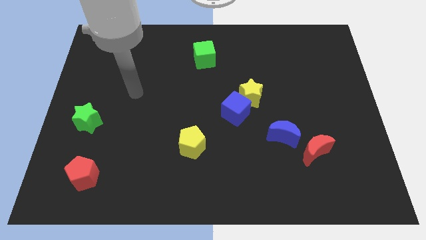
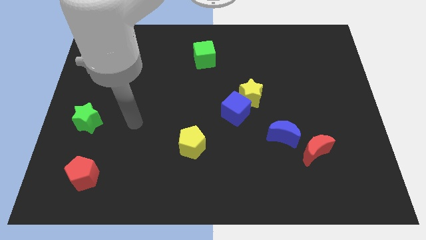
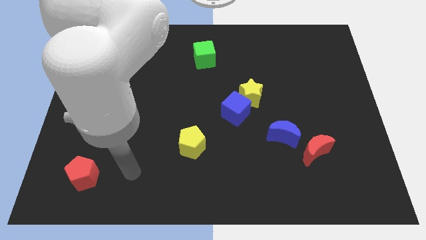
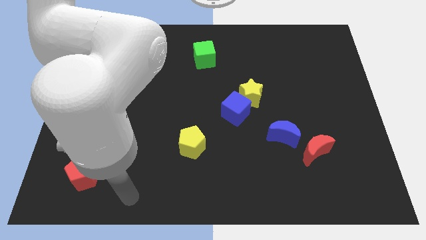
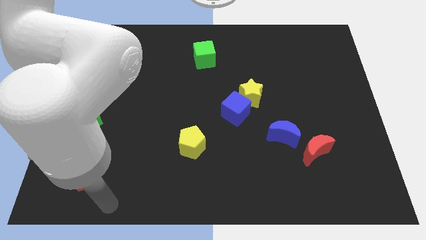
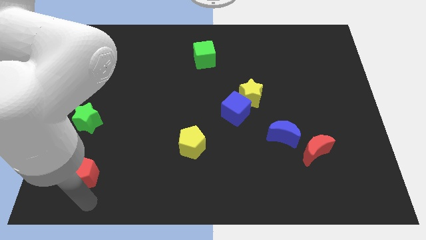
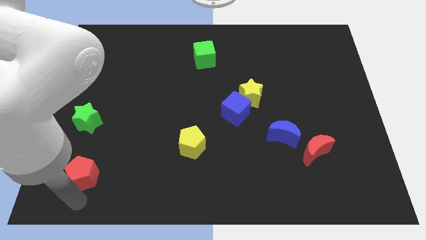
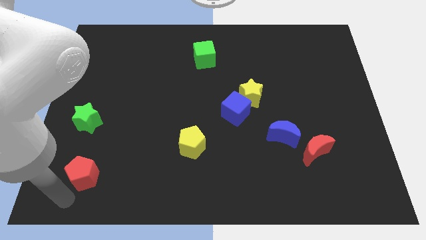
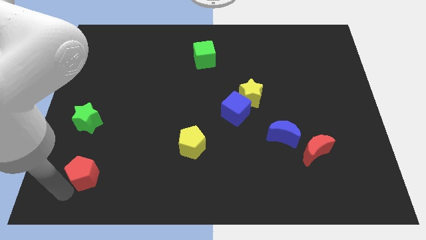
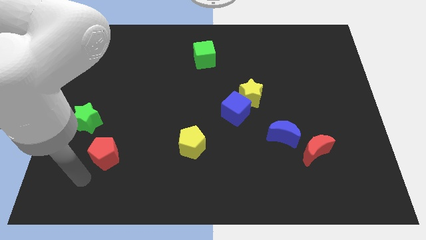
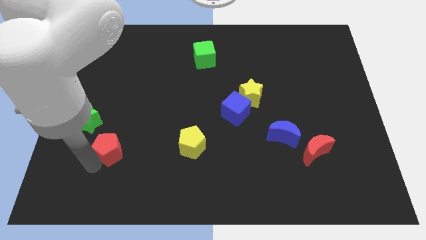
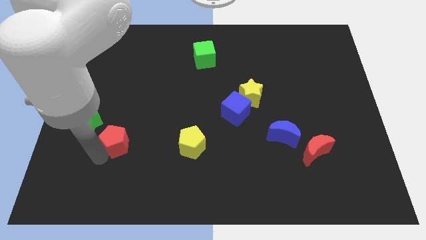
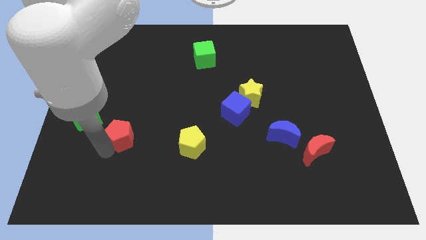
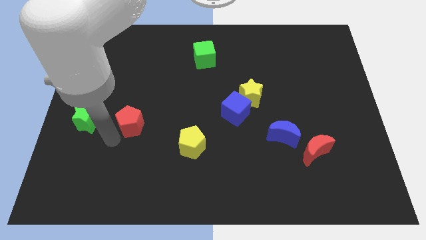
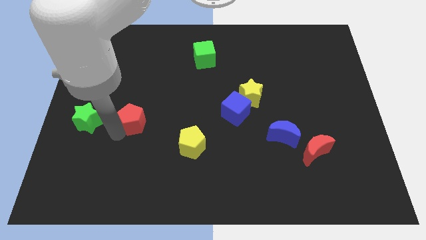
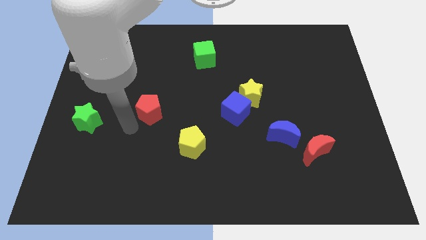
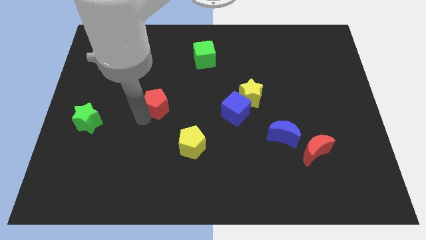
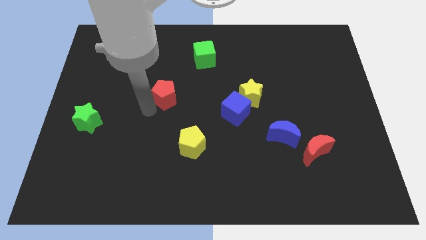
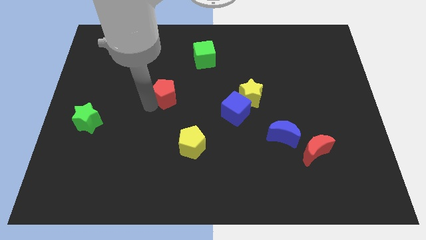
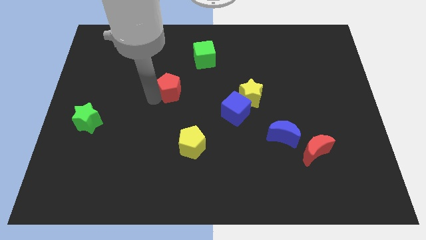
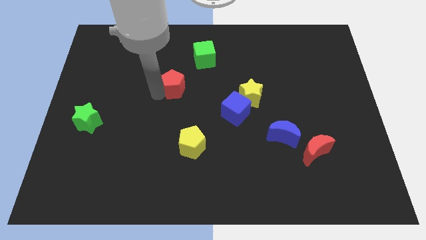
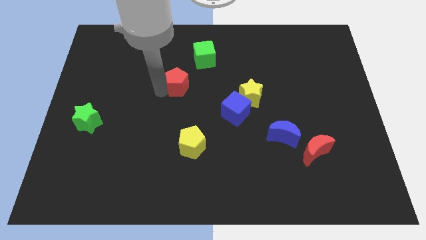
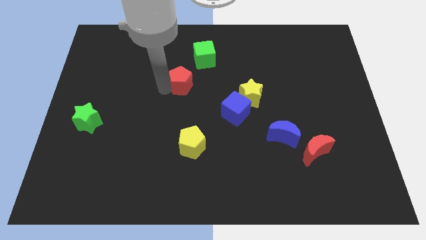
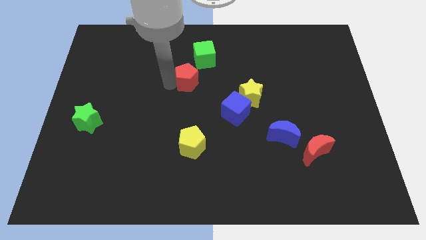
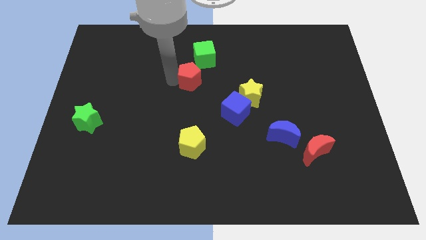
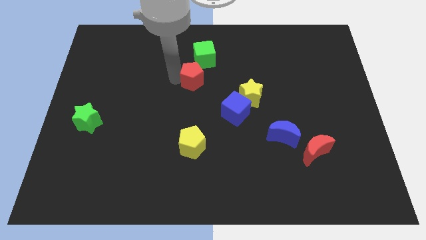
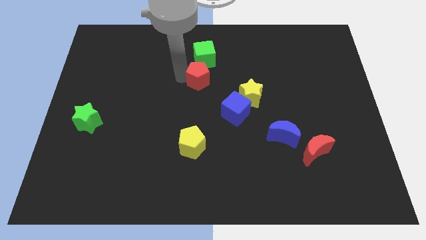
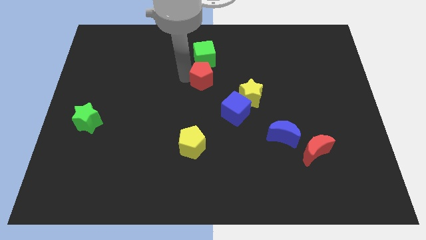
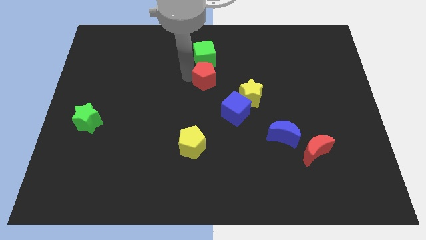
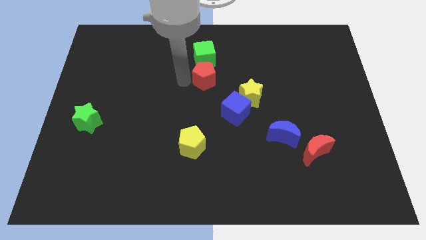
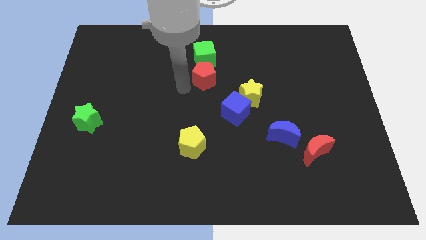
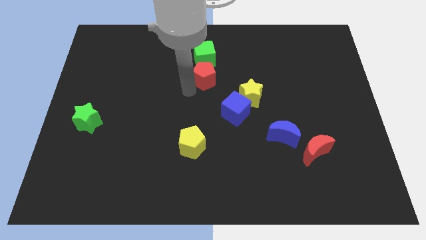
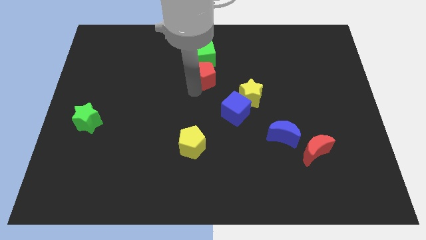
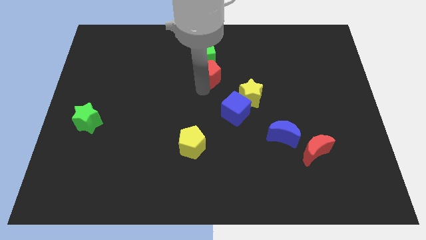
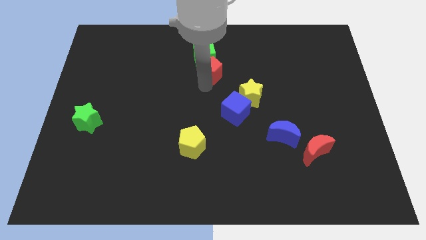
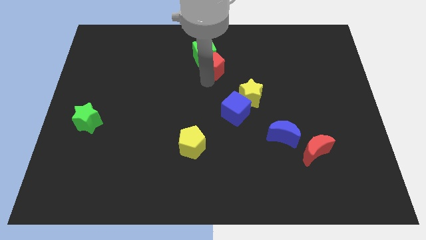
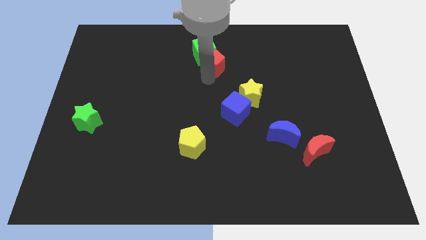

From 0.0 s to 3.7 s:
push the red pentagon next to the green cube

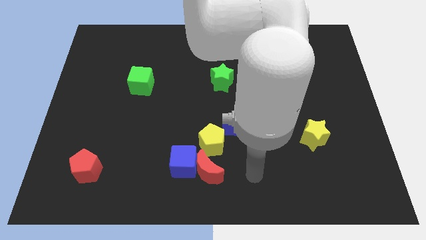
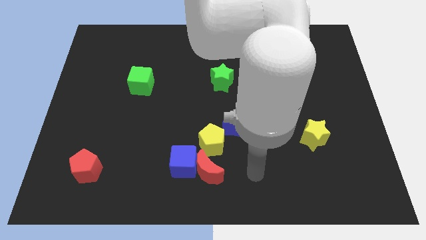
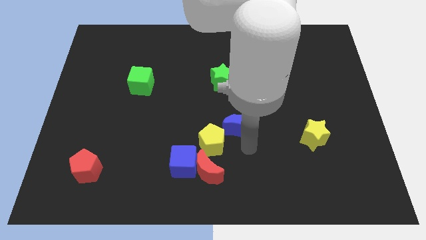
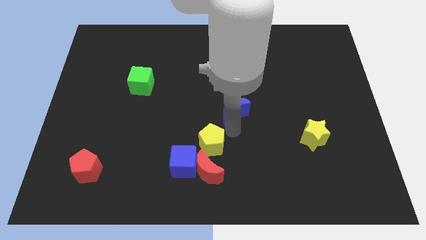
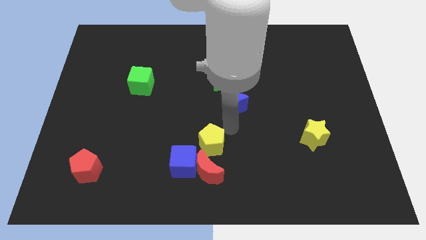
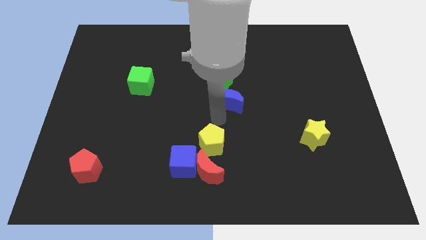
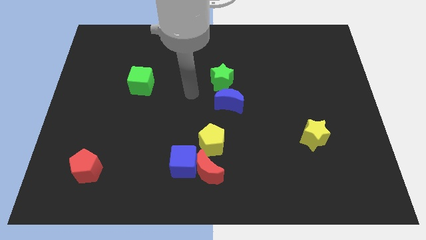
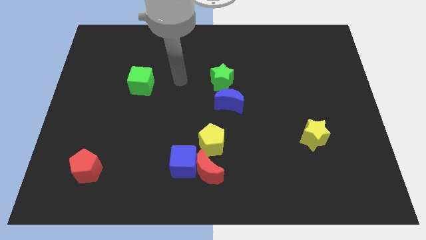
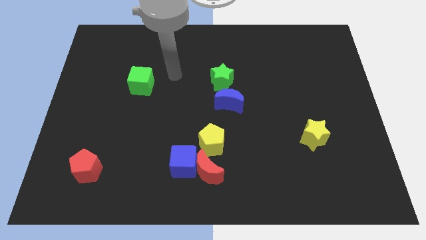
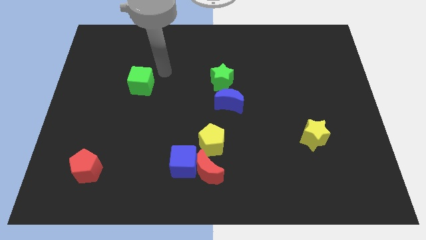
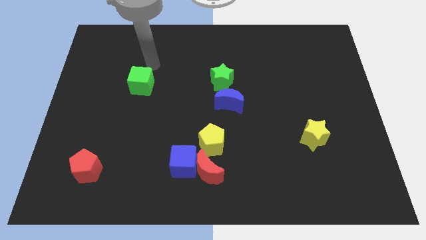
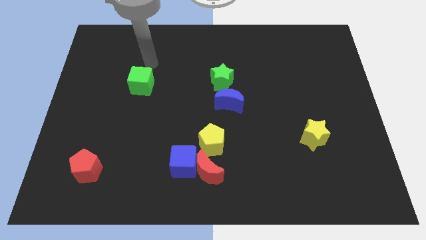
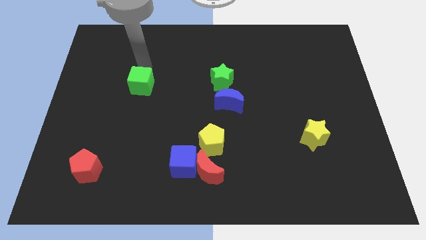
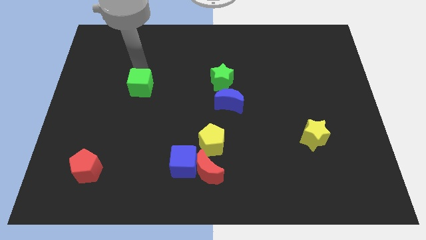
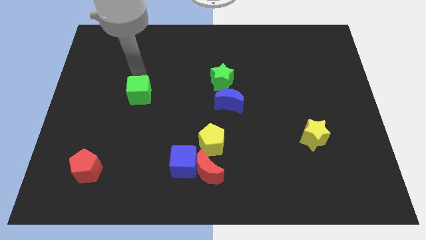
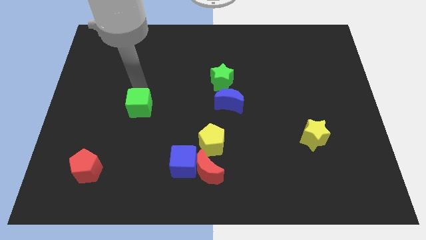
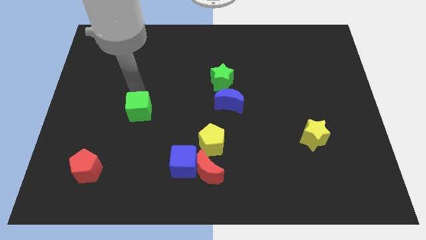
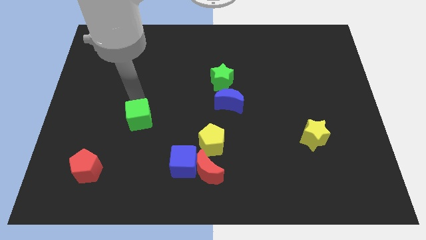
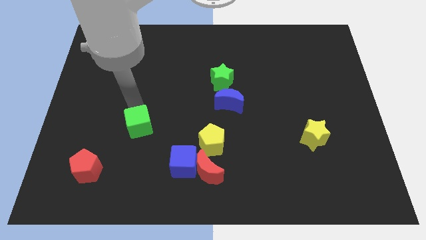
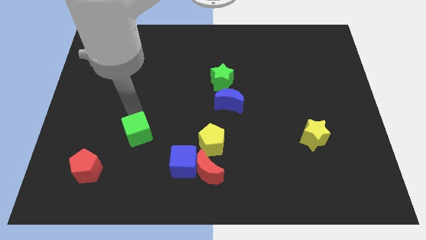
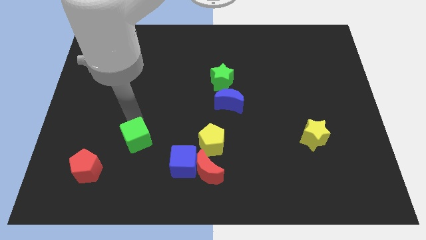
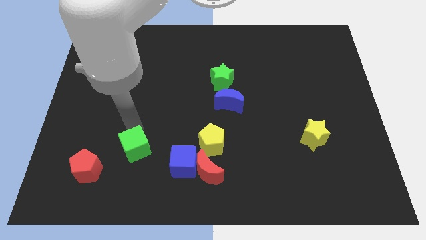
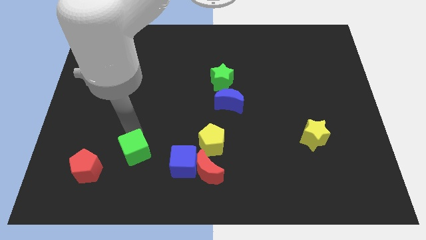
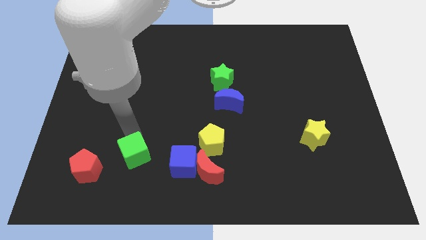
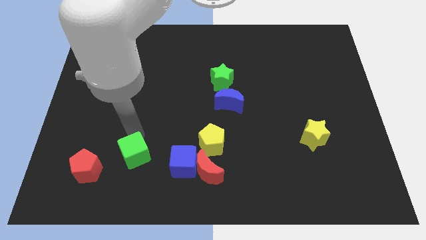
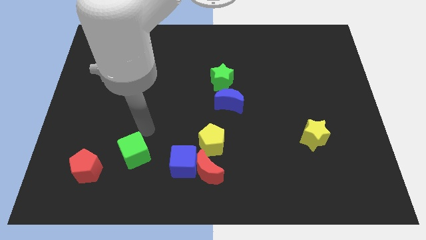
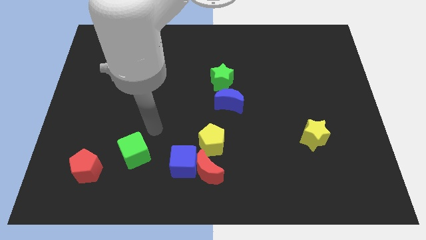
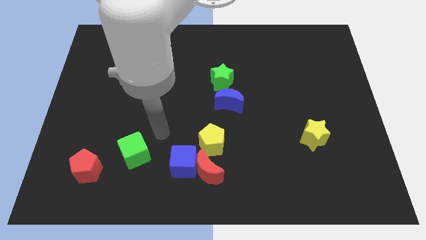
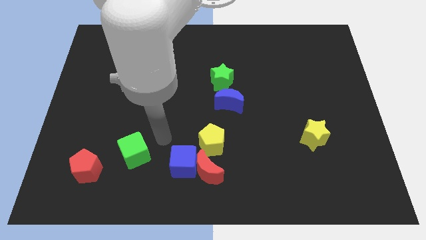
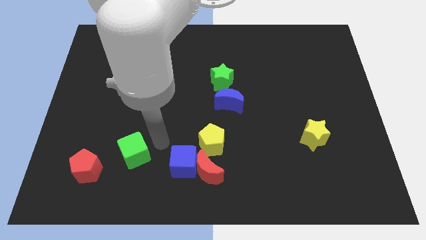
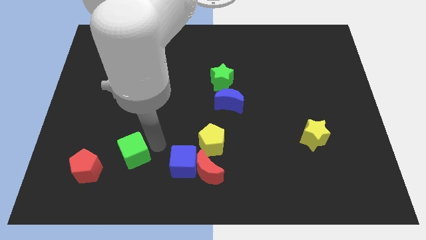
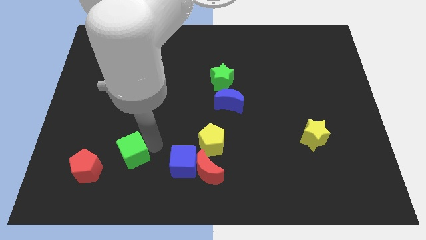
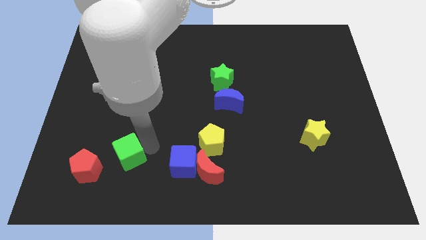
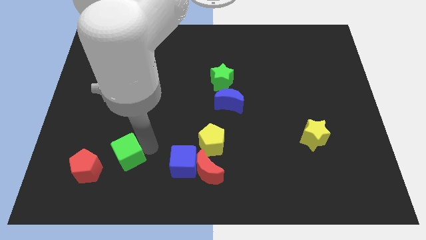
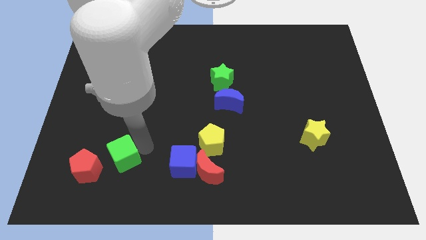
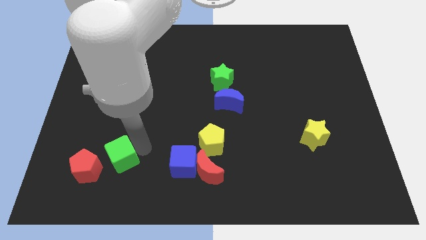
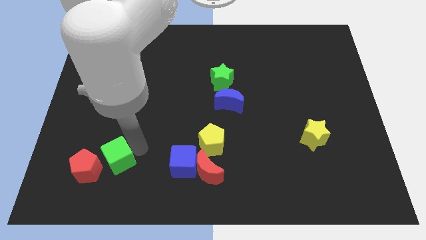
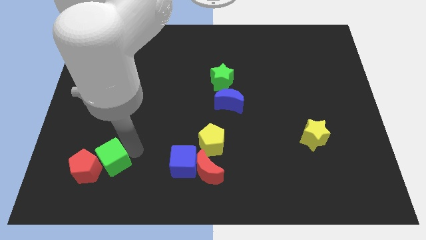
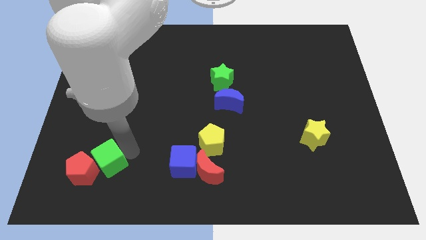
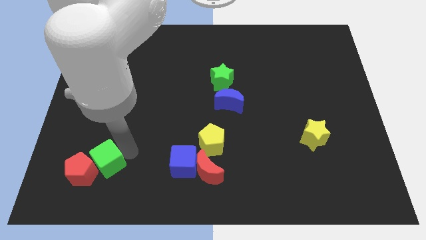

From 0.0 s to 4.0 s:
move the green cube towards the red pentagon

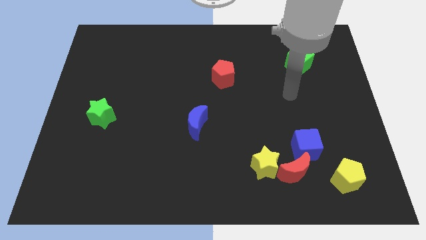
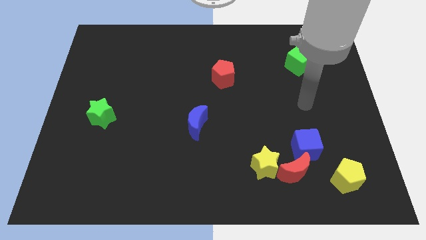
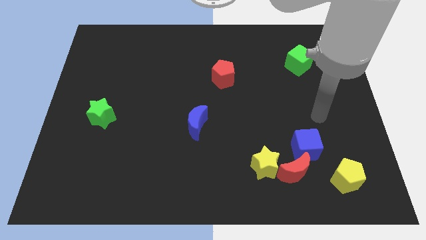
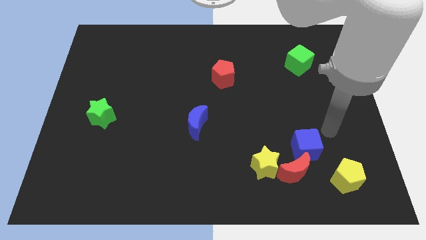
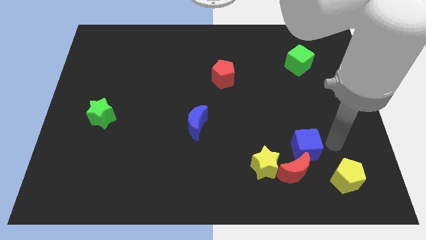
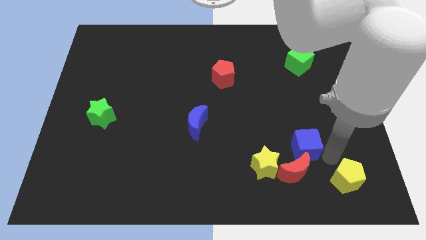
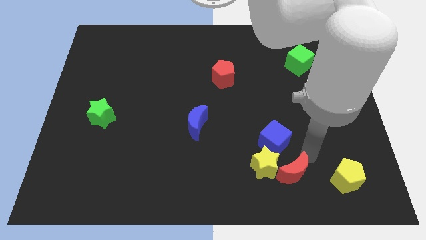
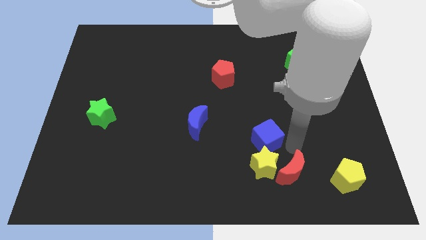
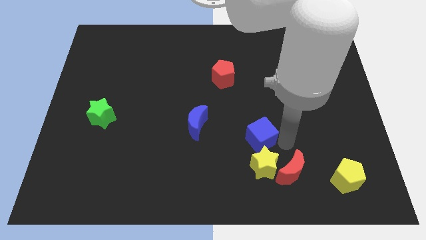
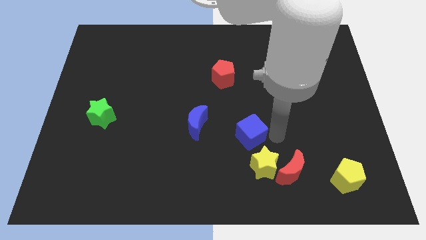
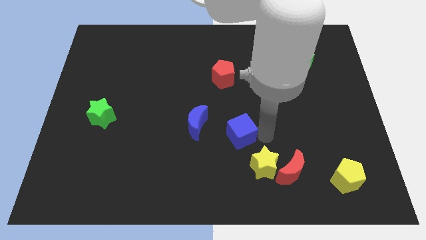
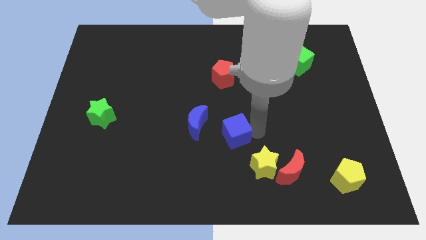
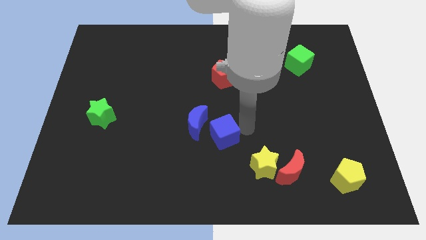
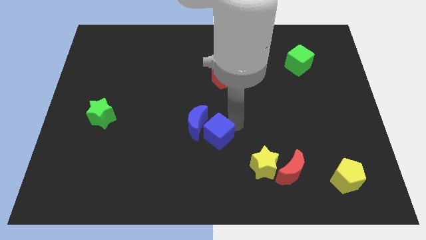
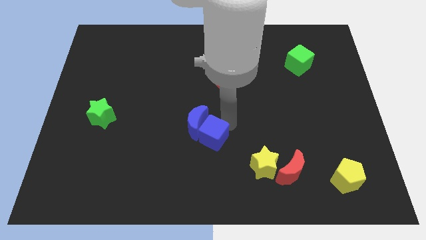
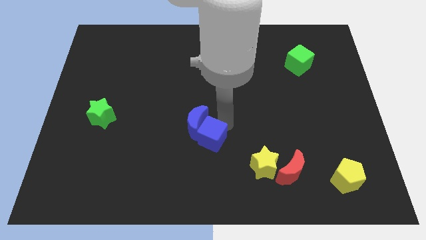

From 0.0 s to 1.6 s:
put the blue cube towards the blue moon
